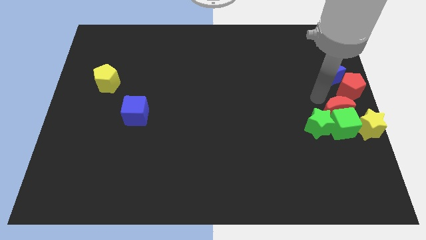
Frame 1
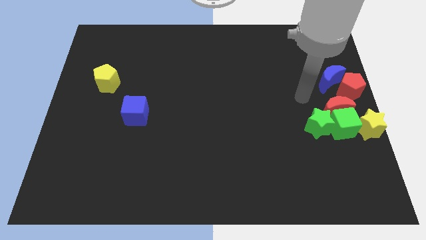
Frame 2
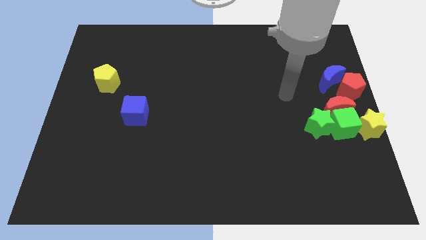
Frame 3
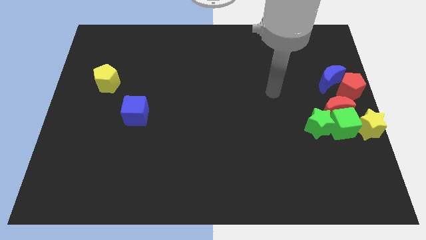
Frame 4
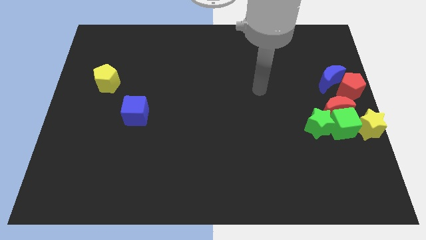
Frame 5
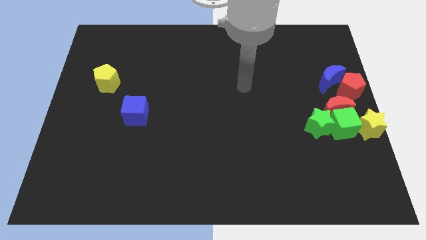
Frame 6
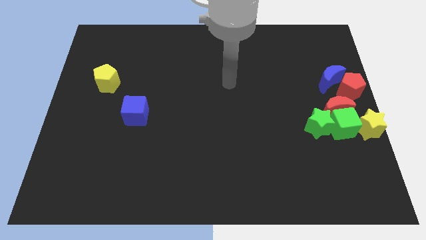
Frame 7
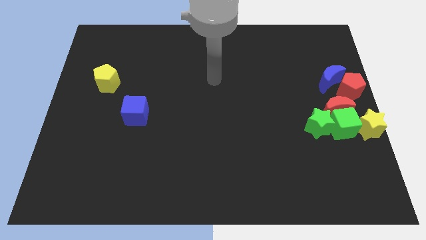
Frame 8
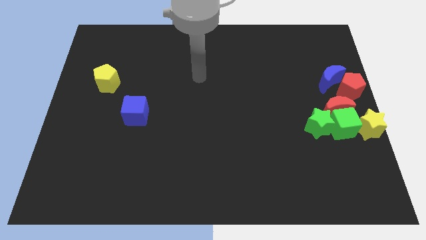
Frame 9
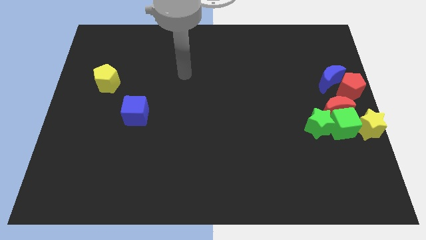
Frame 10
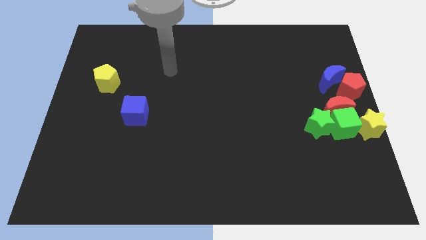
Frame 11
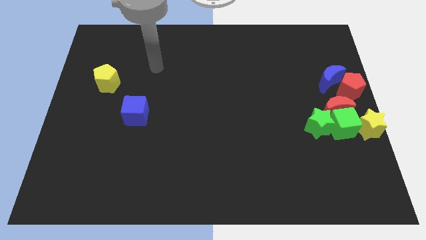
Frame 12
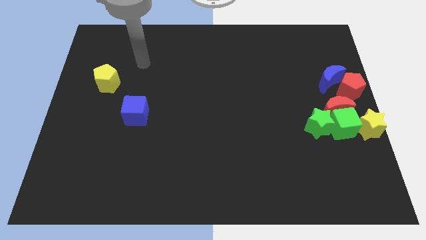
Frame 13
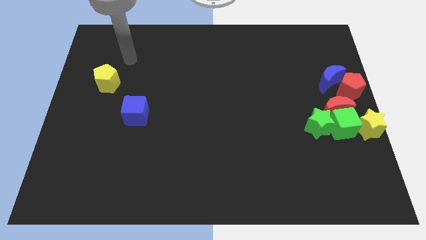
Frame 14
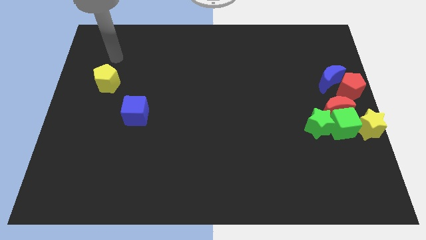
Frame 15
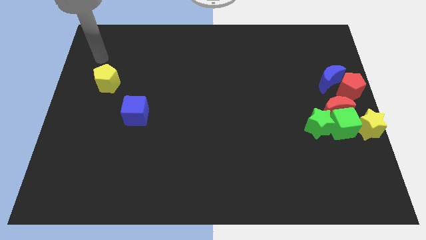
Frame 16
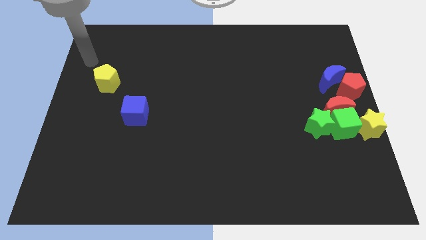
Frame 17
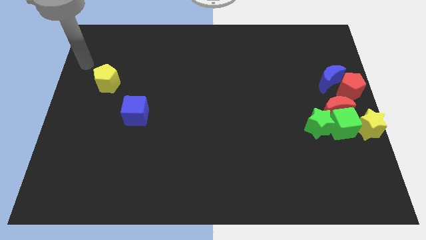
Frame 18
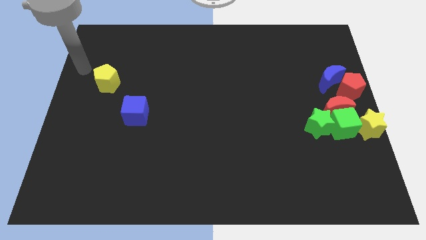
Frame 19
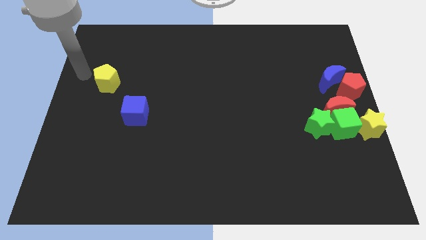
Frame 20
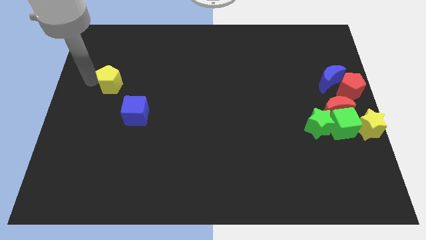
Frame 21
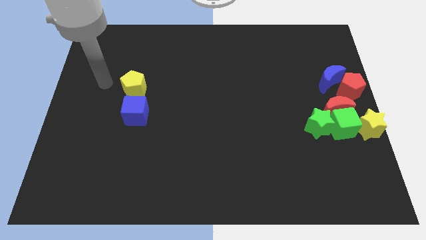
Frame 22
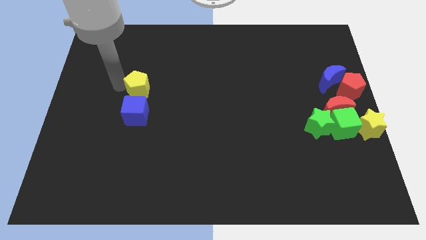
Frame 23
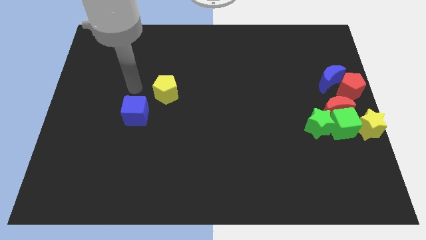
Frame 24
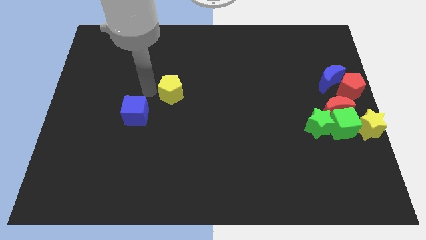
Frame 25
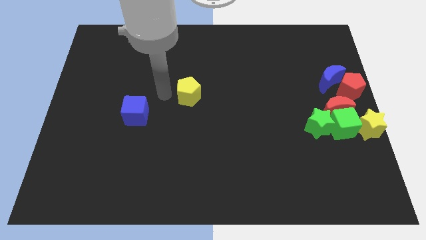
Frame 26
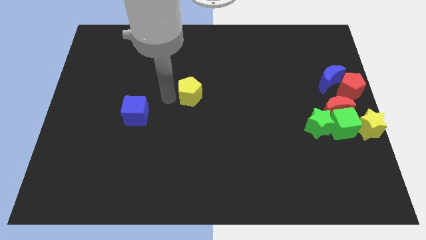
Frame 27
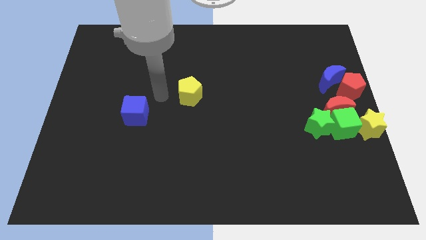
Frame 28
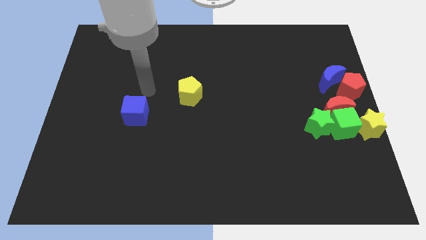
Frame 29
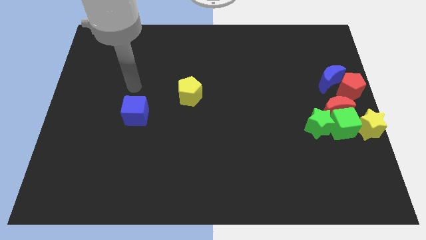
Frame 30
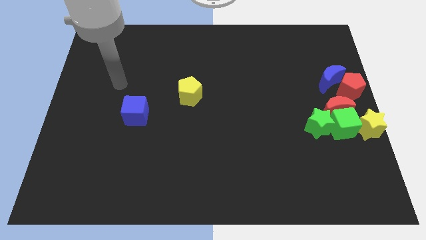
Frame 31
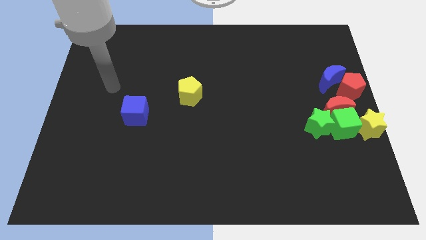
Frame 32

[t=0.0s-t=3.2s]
move the yellow pentagon to the top right of the blue cube

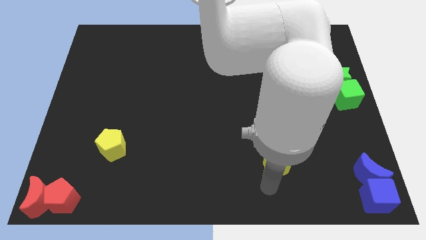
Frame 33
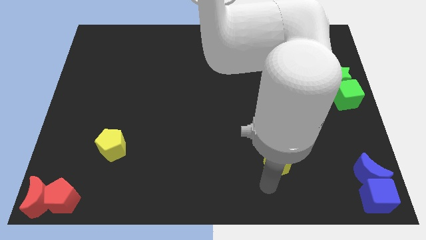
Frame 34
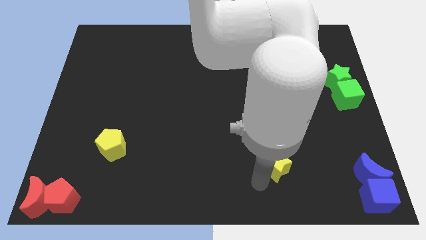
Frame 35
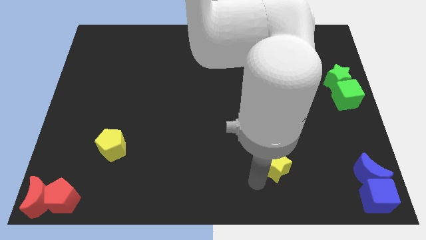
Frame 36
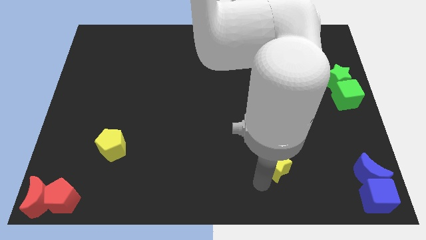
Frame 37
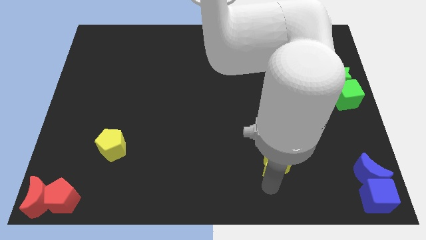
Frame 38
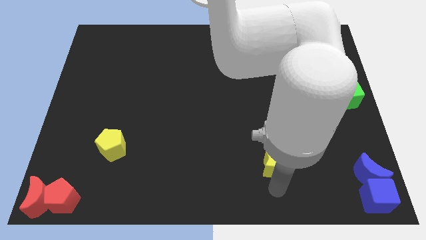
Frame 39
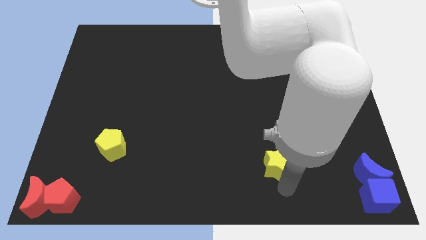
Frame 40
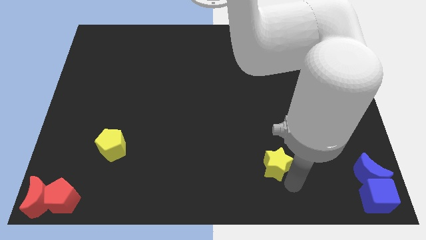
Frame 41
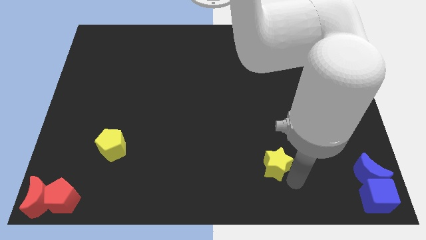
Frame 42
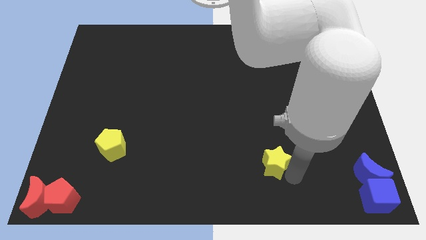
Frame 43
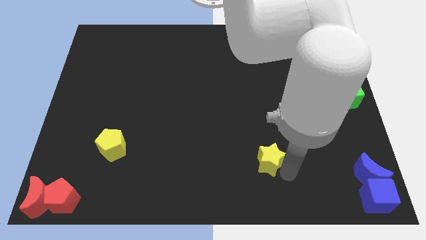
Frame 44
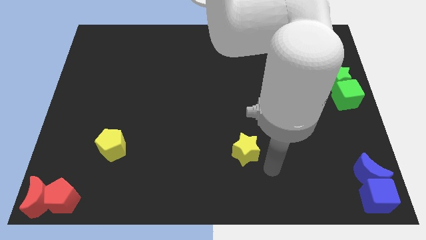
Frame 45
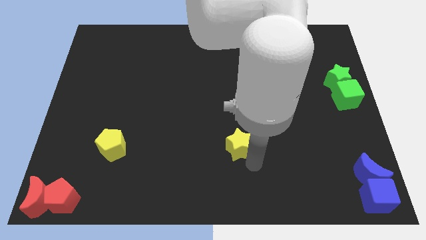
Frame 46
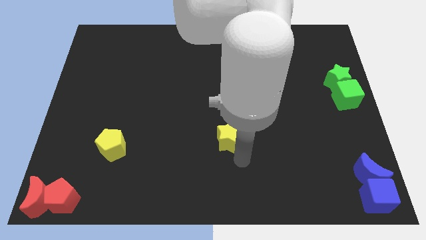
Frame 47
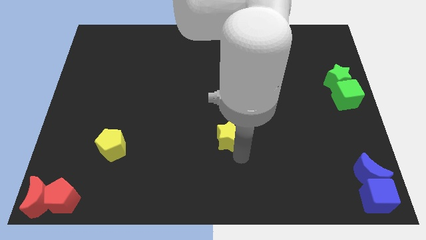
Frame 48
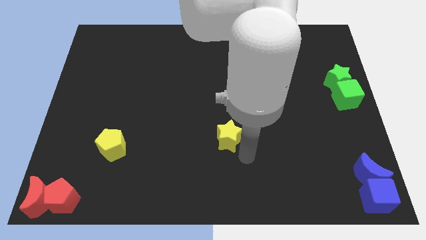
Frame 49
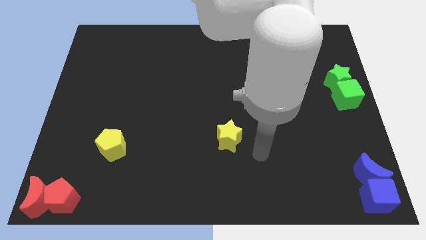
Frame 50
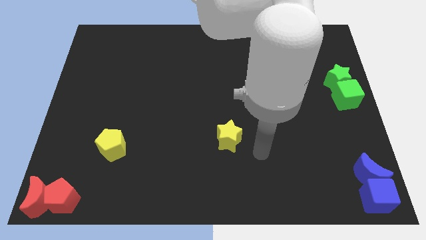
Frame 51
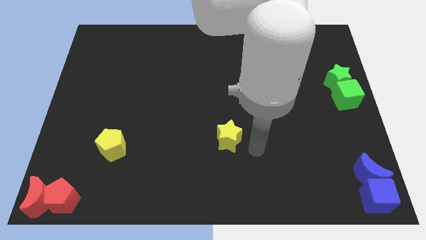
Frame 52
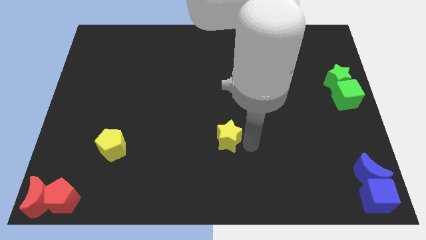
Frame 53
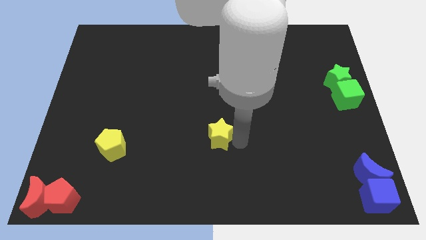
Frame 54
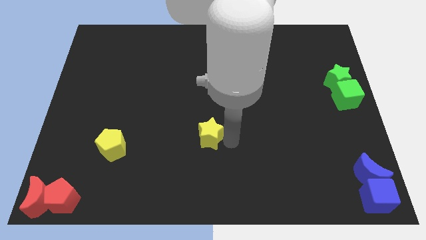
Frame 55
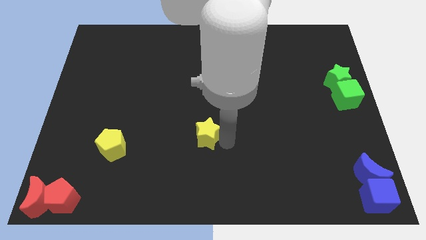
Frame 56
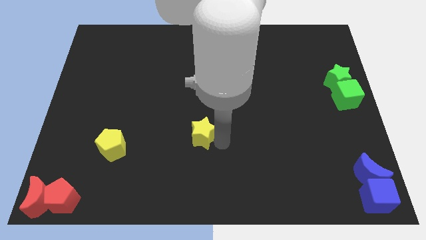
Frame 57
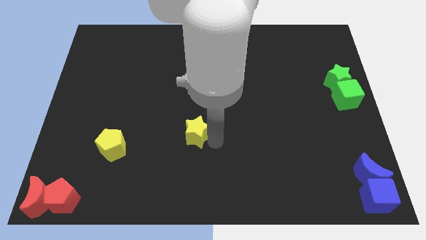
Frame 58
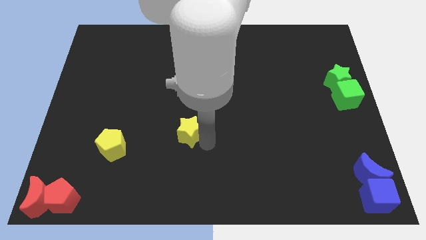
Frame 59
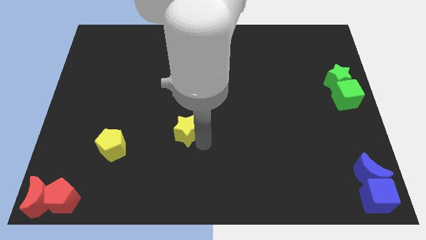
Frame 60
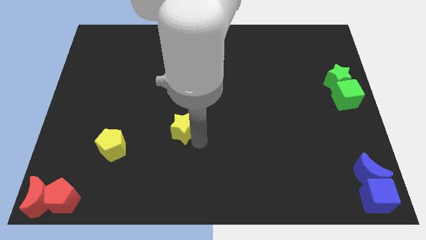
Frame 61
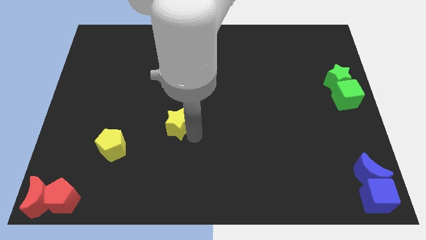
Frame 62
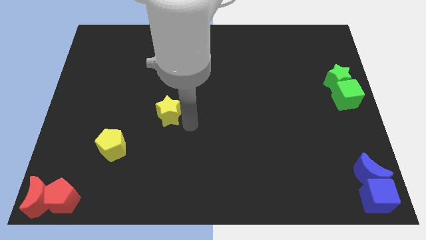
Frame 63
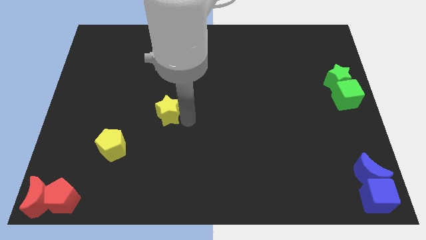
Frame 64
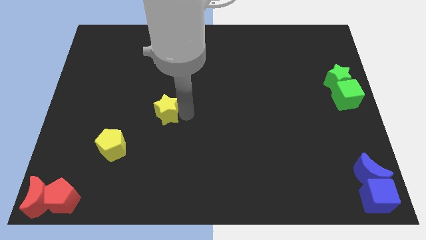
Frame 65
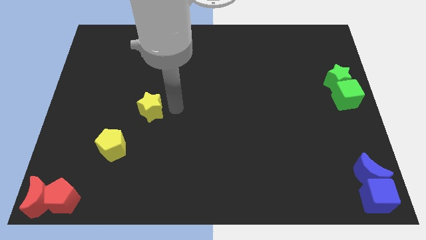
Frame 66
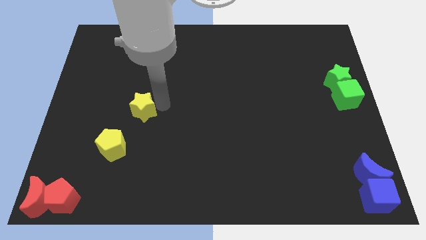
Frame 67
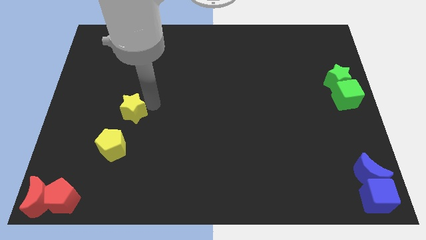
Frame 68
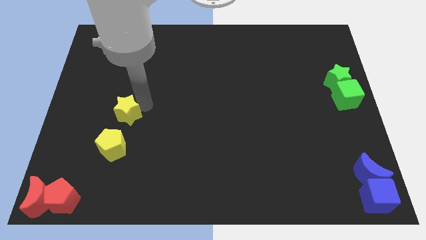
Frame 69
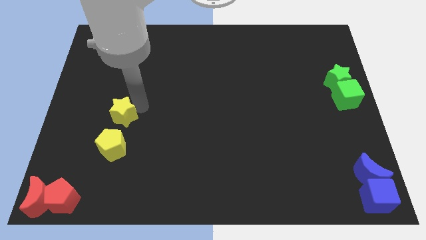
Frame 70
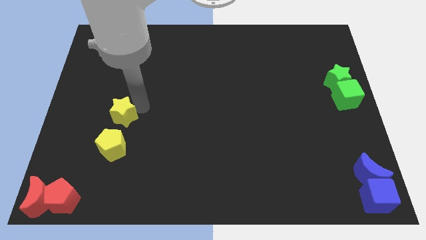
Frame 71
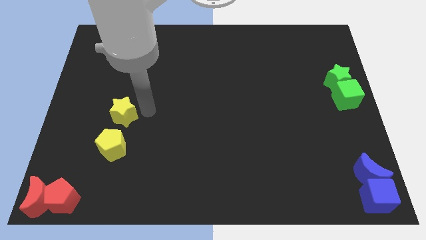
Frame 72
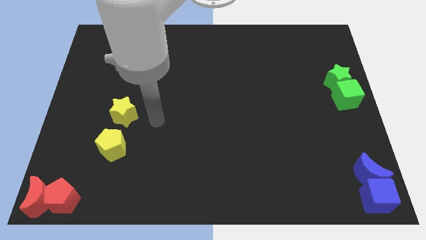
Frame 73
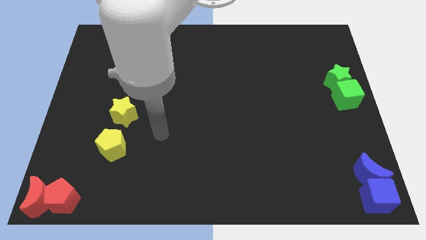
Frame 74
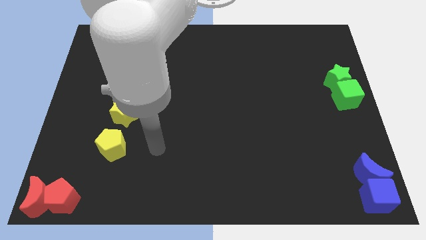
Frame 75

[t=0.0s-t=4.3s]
push the yellow star to the top of the yellow pentagon

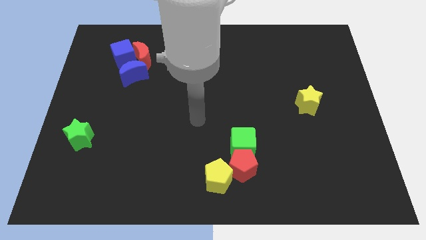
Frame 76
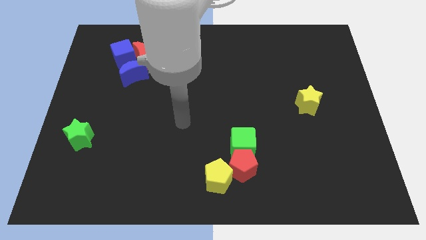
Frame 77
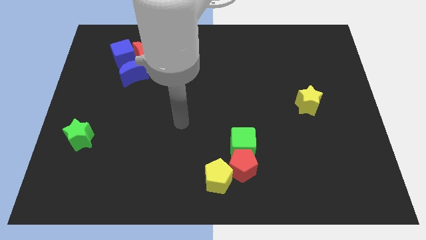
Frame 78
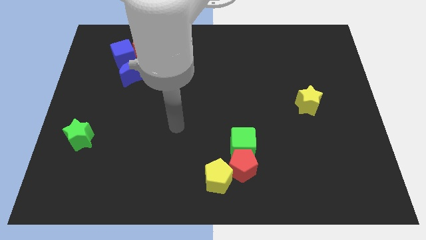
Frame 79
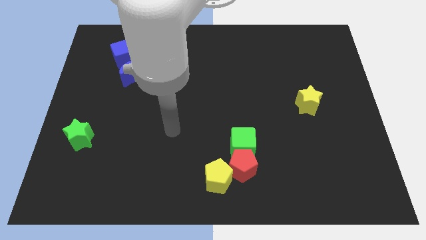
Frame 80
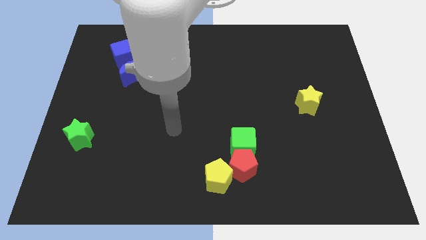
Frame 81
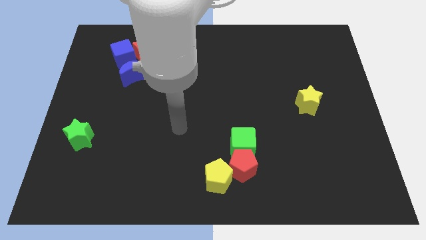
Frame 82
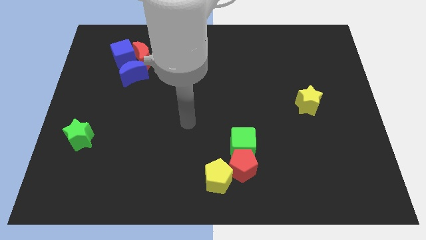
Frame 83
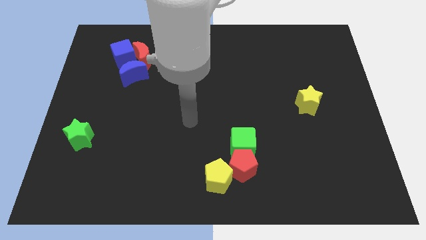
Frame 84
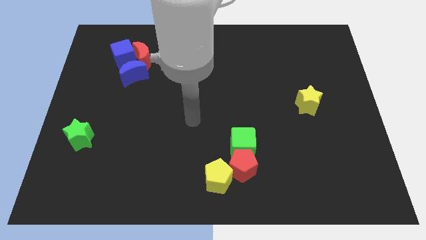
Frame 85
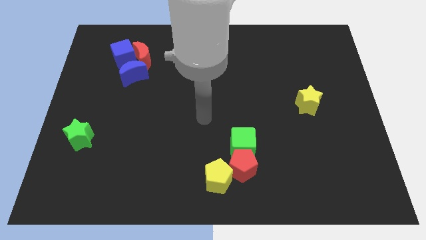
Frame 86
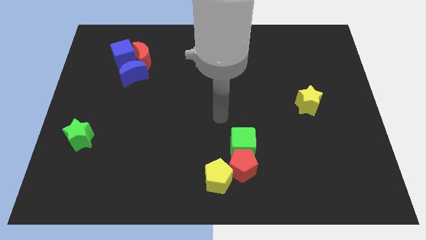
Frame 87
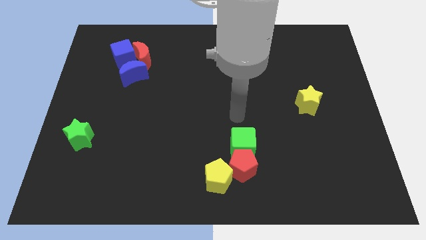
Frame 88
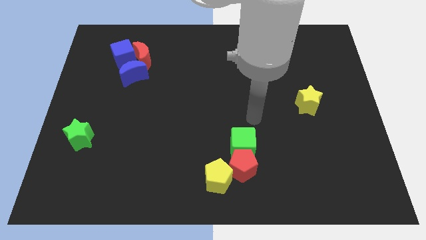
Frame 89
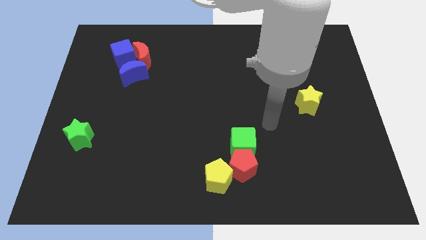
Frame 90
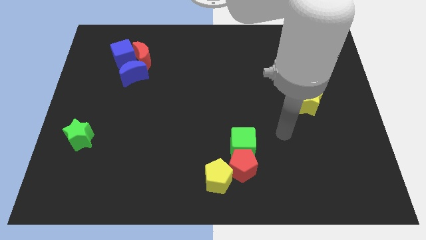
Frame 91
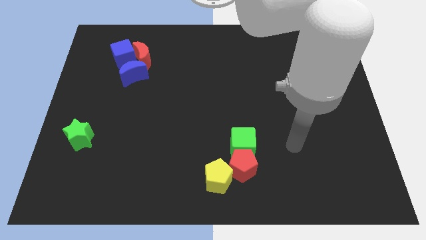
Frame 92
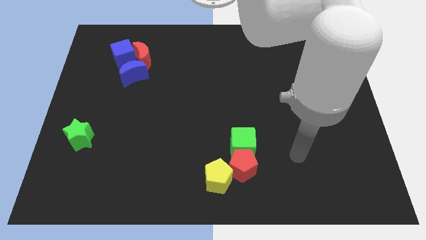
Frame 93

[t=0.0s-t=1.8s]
point your arm at the right side of the green cube
